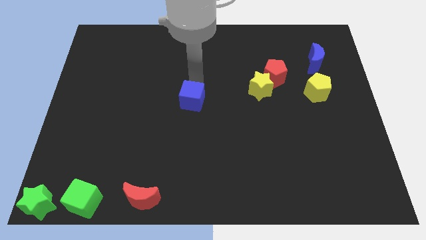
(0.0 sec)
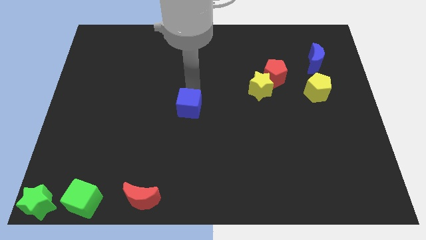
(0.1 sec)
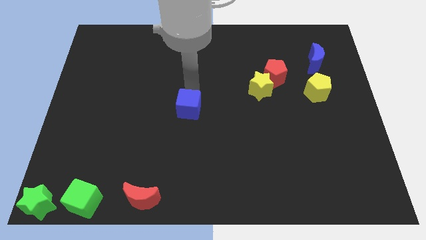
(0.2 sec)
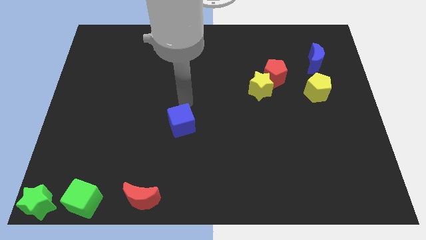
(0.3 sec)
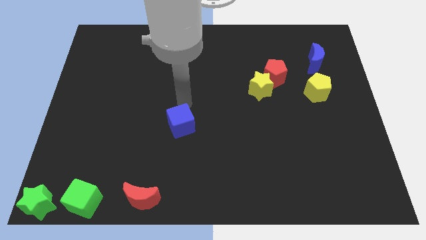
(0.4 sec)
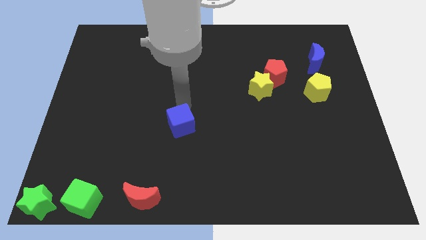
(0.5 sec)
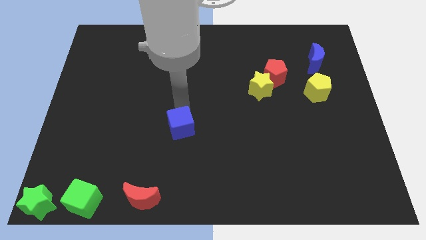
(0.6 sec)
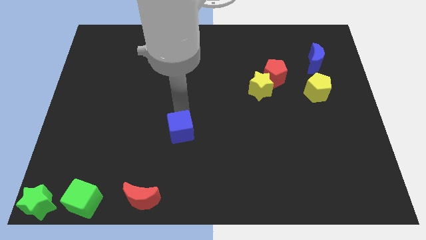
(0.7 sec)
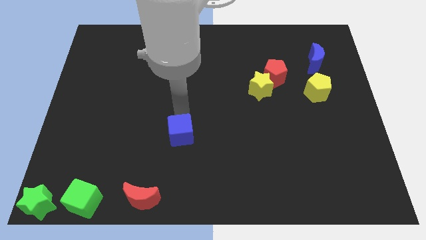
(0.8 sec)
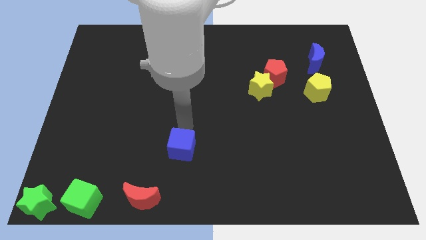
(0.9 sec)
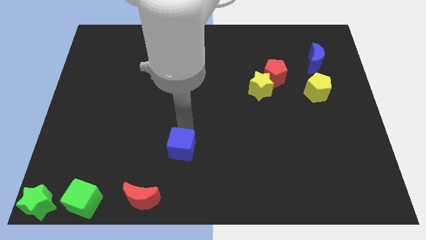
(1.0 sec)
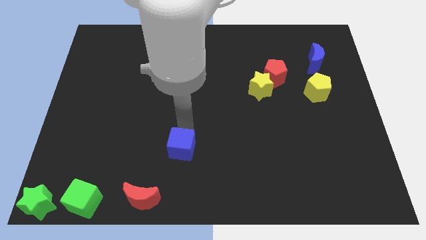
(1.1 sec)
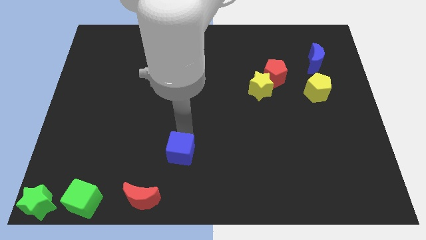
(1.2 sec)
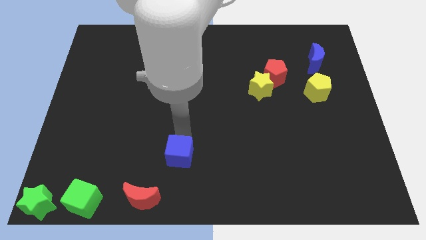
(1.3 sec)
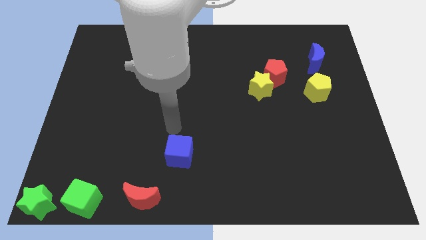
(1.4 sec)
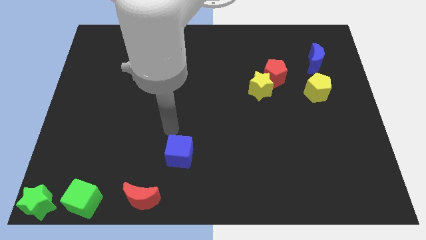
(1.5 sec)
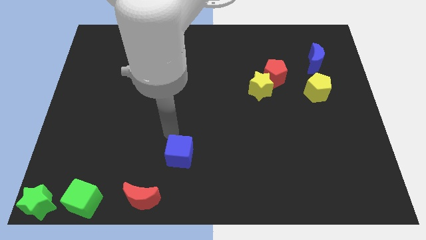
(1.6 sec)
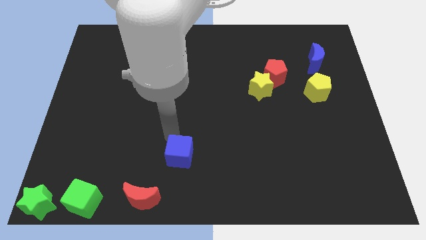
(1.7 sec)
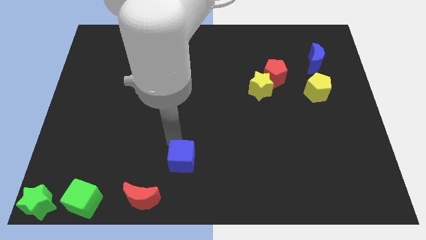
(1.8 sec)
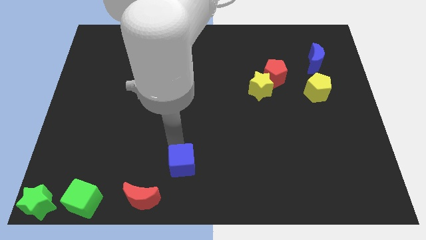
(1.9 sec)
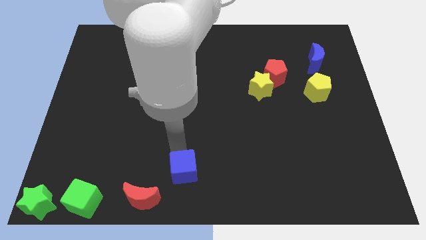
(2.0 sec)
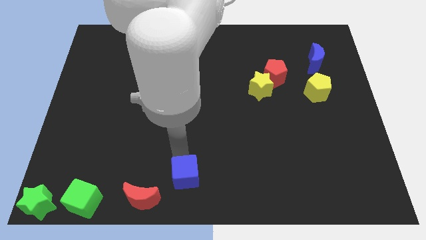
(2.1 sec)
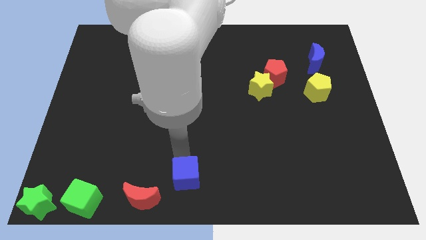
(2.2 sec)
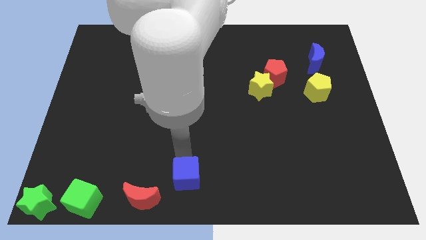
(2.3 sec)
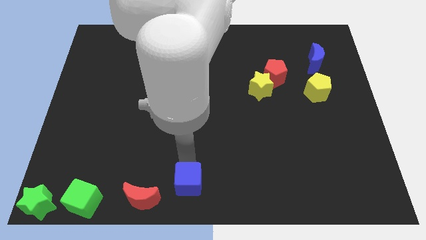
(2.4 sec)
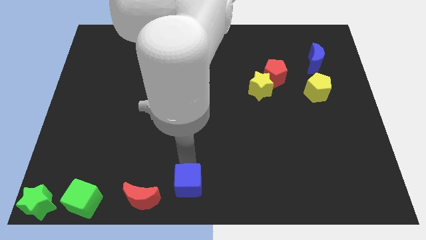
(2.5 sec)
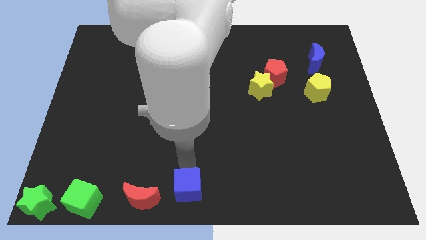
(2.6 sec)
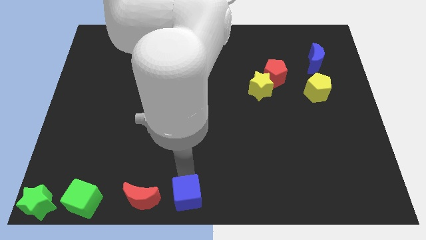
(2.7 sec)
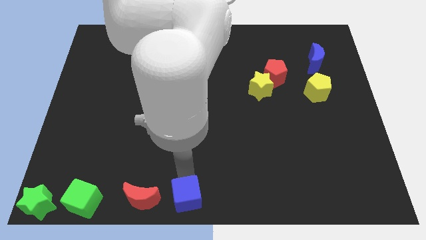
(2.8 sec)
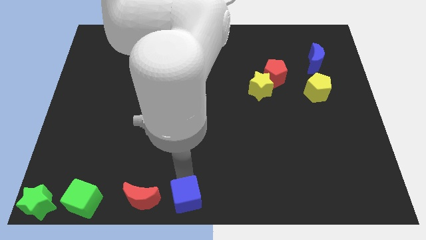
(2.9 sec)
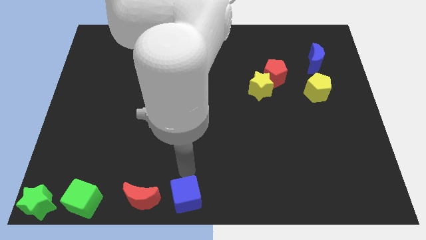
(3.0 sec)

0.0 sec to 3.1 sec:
move the blue cube to the right side of the red moon

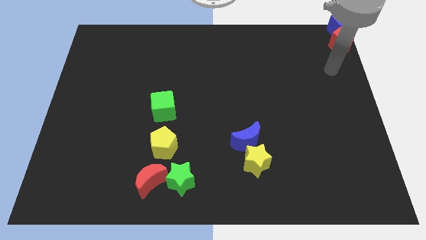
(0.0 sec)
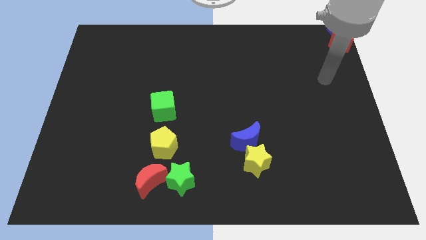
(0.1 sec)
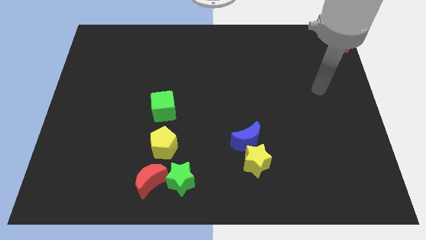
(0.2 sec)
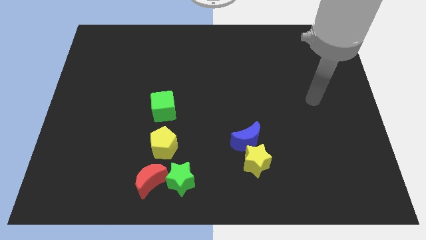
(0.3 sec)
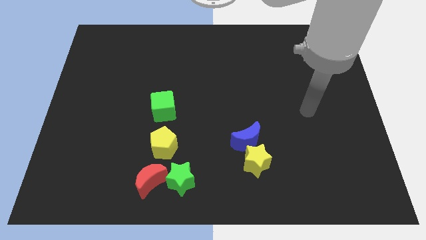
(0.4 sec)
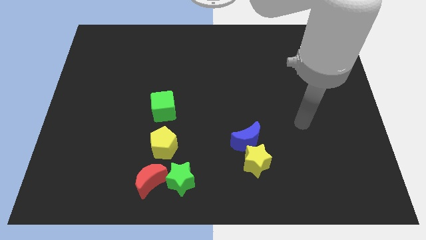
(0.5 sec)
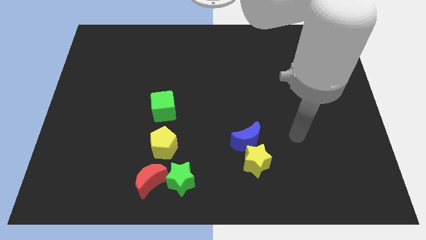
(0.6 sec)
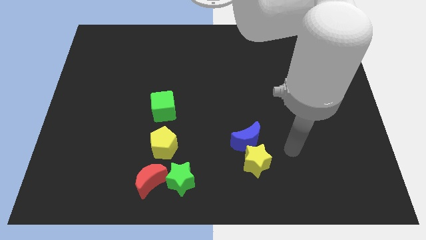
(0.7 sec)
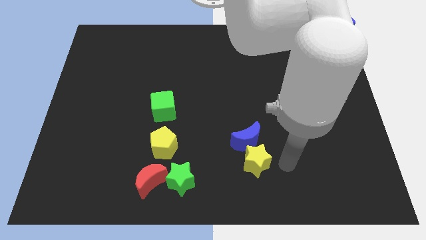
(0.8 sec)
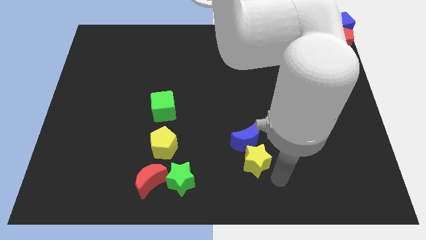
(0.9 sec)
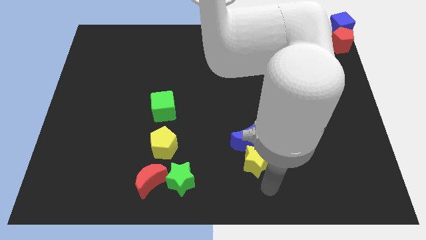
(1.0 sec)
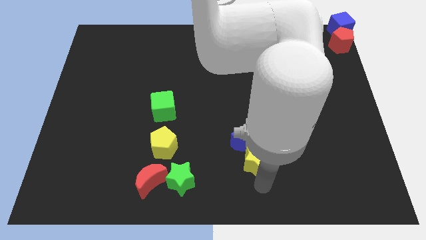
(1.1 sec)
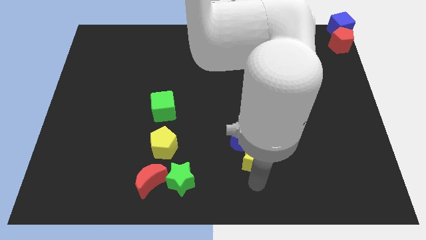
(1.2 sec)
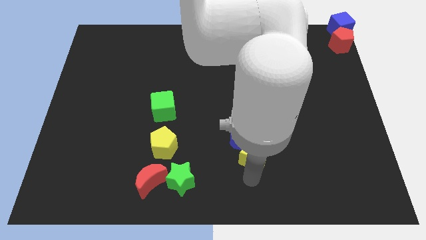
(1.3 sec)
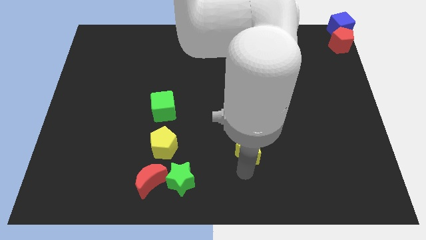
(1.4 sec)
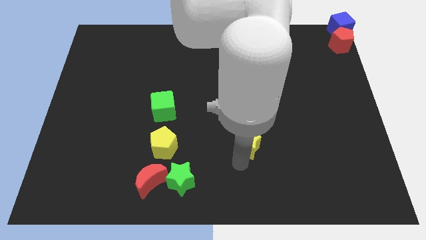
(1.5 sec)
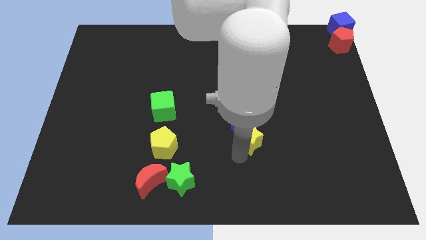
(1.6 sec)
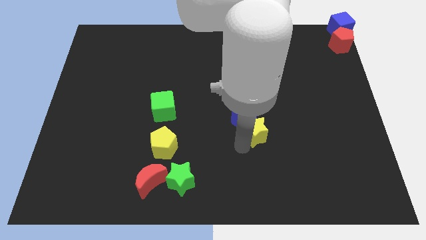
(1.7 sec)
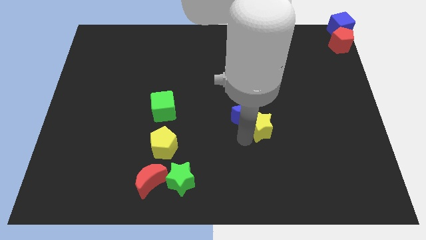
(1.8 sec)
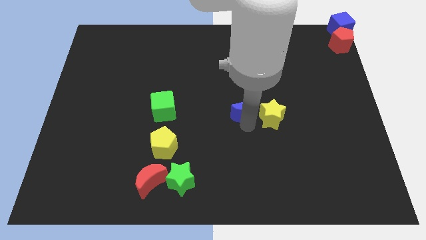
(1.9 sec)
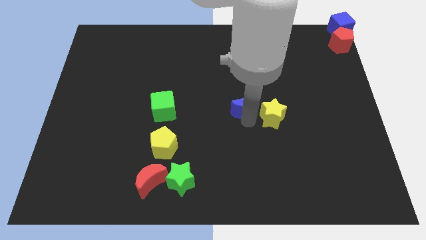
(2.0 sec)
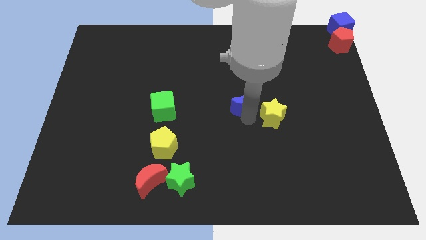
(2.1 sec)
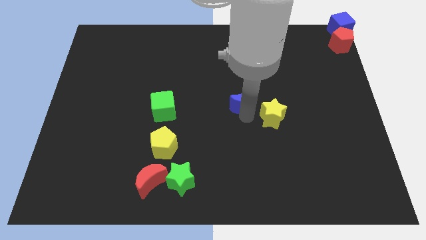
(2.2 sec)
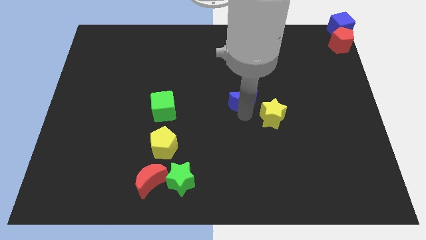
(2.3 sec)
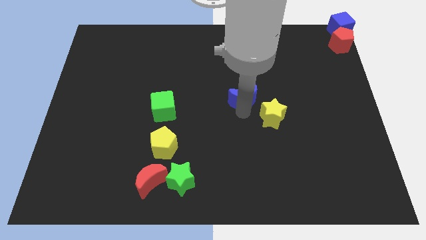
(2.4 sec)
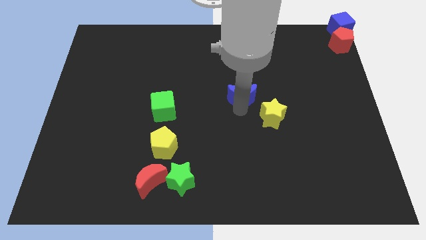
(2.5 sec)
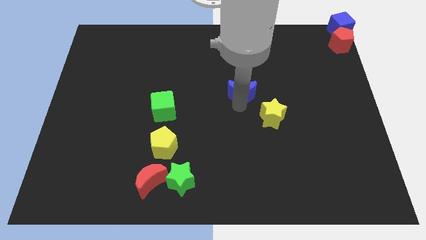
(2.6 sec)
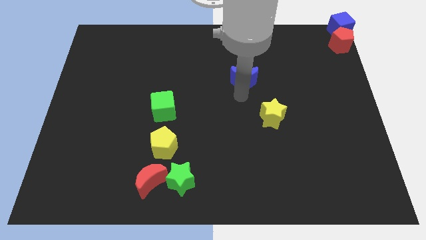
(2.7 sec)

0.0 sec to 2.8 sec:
place the yellow star and the blue crescent in a diagonally

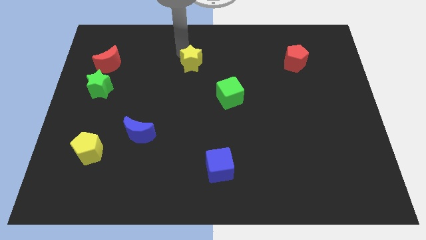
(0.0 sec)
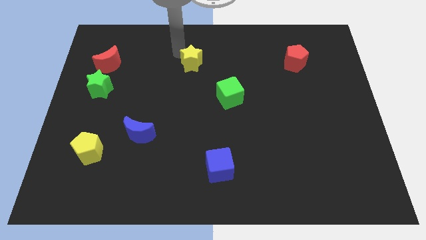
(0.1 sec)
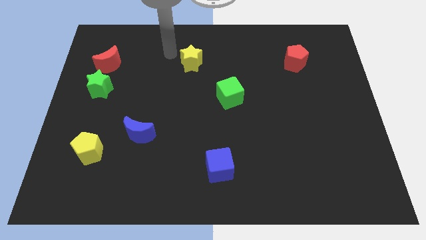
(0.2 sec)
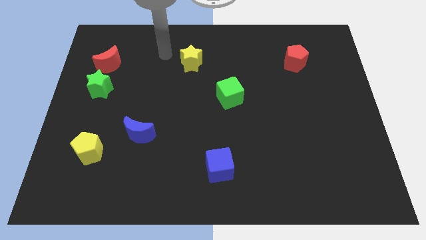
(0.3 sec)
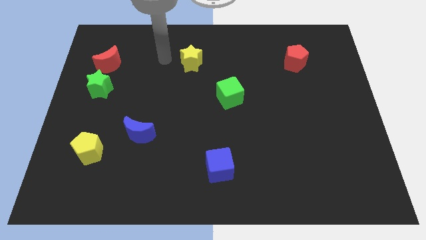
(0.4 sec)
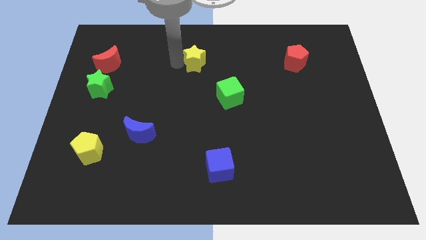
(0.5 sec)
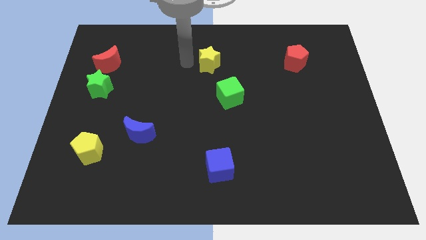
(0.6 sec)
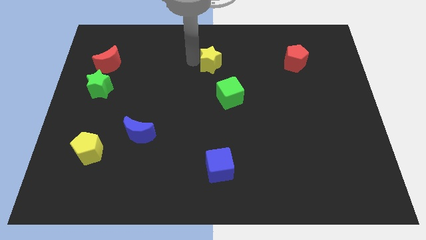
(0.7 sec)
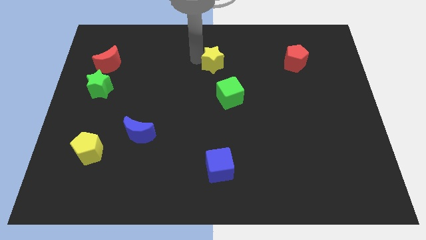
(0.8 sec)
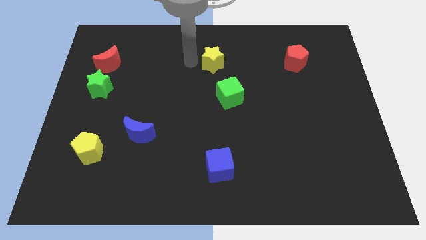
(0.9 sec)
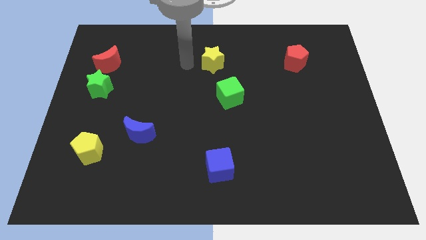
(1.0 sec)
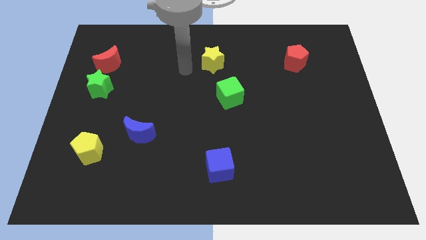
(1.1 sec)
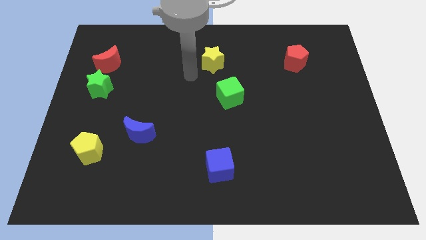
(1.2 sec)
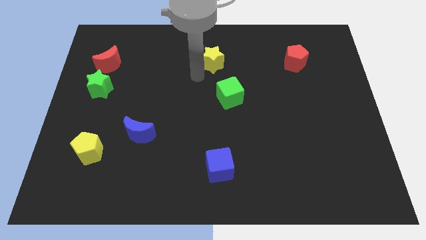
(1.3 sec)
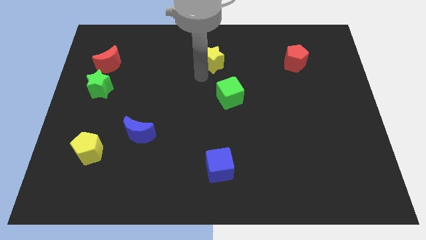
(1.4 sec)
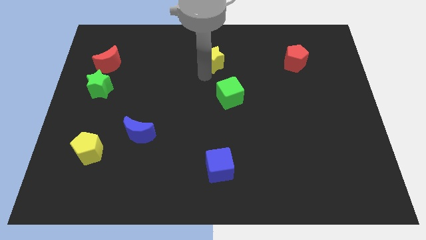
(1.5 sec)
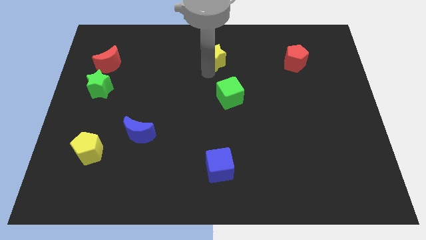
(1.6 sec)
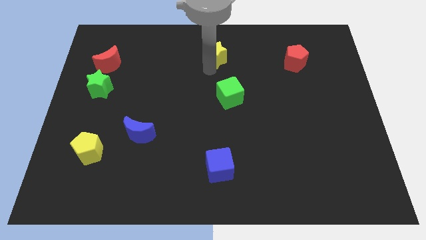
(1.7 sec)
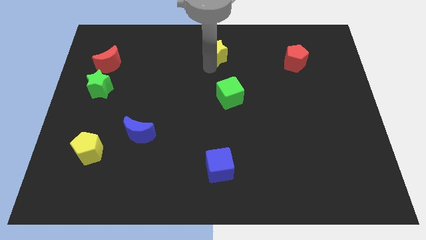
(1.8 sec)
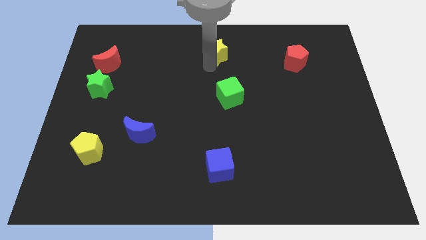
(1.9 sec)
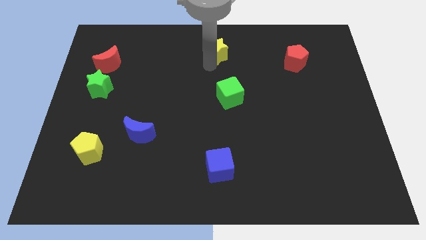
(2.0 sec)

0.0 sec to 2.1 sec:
push the yellow star to the top center

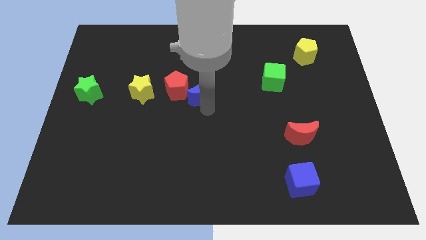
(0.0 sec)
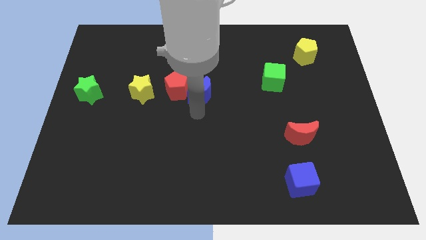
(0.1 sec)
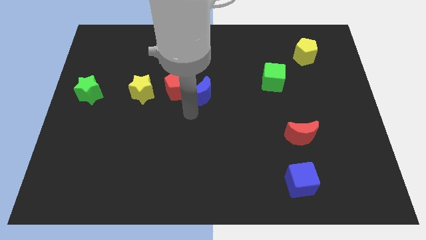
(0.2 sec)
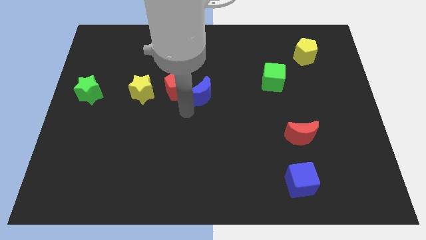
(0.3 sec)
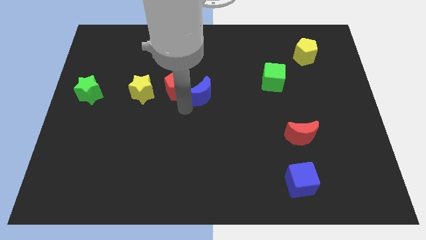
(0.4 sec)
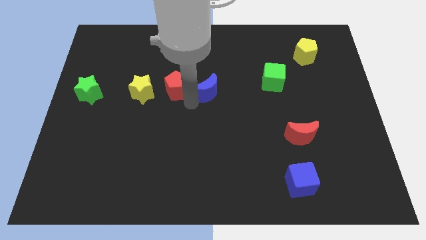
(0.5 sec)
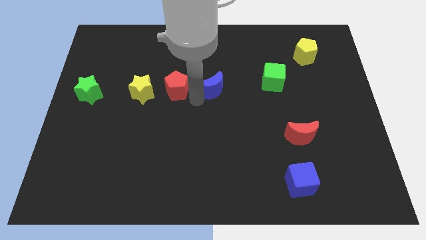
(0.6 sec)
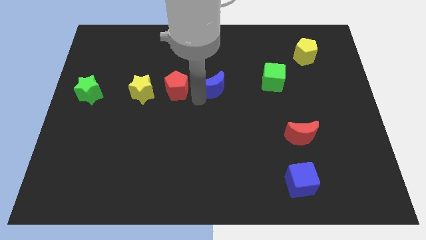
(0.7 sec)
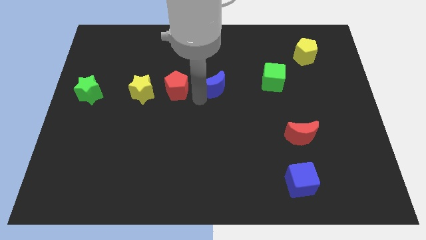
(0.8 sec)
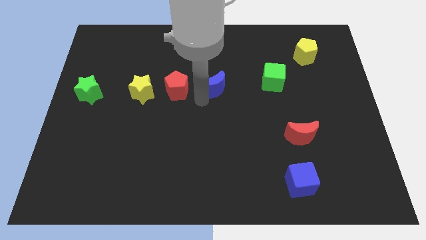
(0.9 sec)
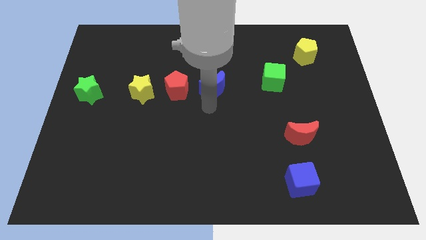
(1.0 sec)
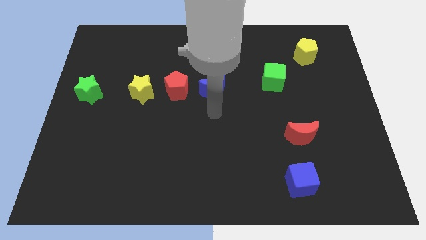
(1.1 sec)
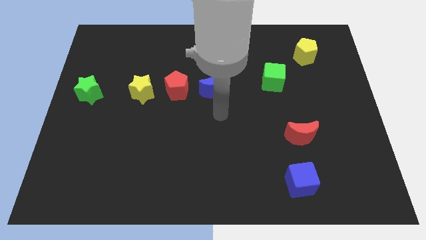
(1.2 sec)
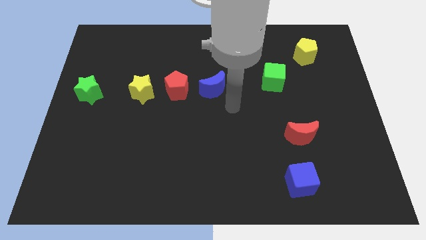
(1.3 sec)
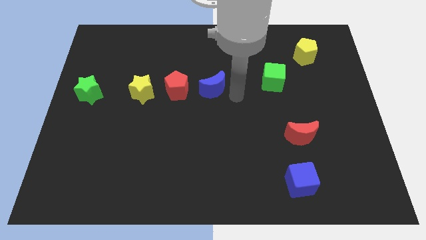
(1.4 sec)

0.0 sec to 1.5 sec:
separate the red pentagon and the blue crescent
